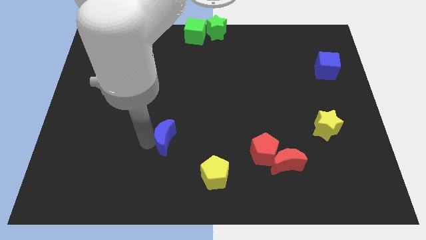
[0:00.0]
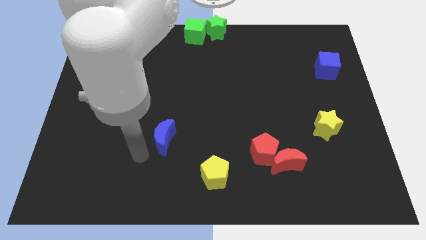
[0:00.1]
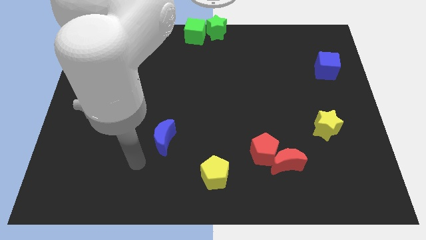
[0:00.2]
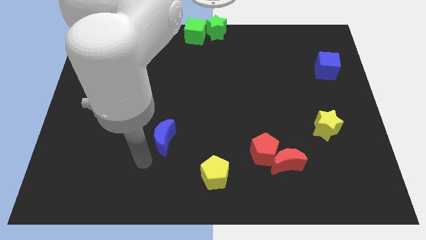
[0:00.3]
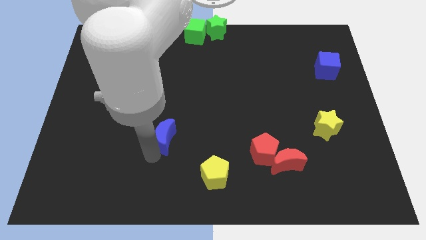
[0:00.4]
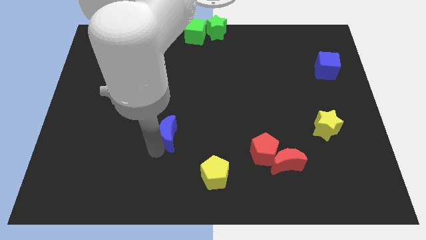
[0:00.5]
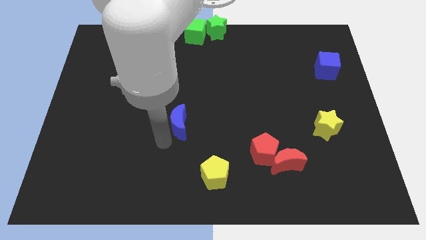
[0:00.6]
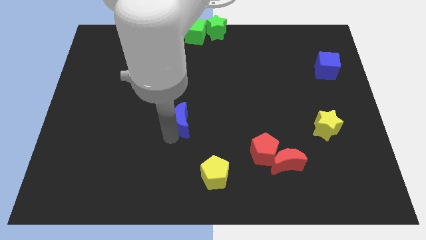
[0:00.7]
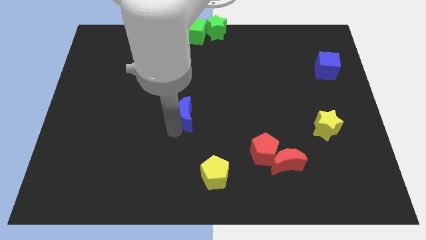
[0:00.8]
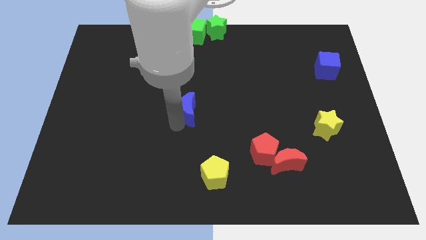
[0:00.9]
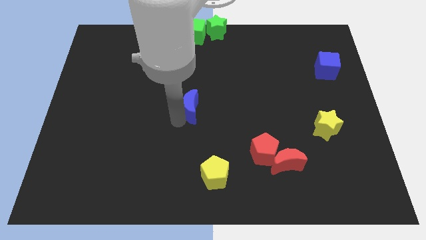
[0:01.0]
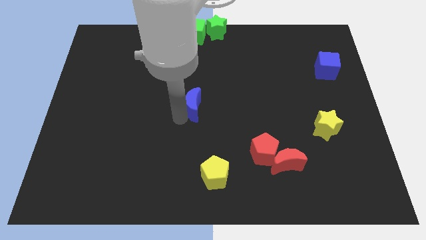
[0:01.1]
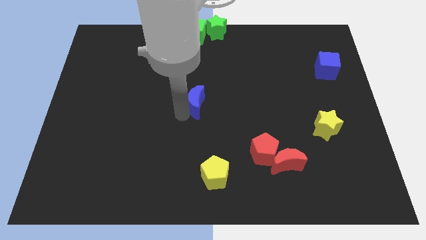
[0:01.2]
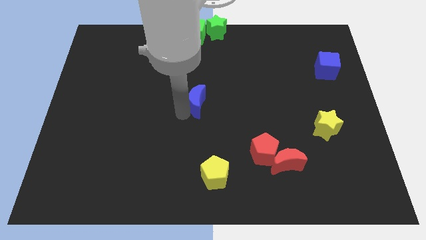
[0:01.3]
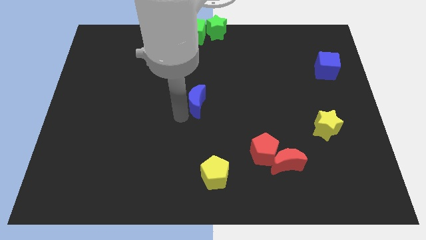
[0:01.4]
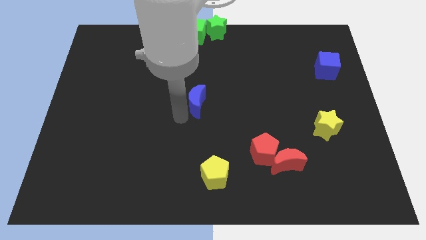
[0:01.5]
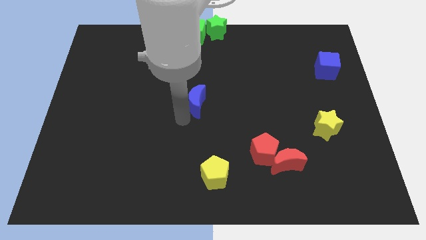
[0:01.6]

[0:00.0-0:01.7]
push the blue moon to the center

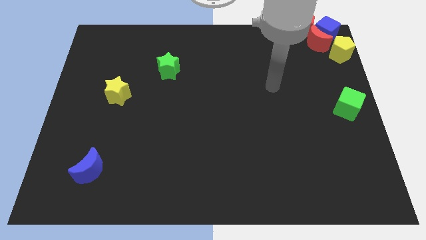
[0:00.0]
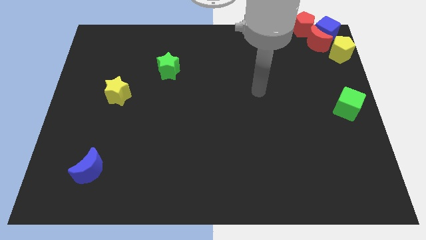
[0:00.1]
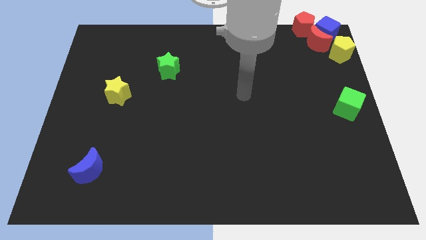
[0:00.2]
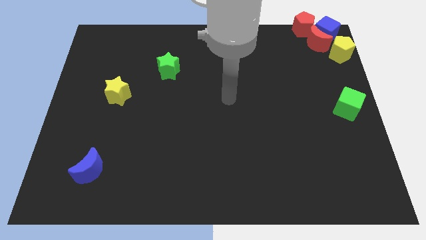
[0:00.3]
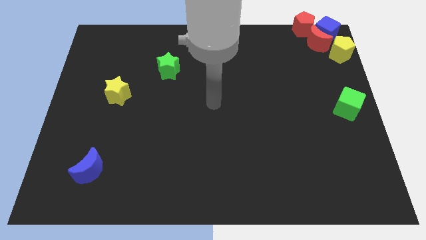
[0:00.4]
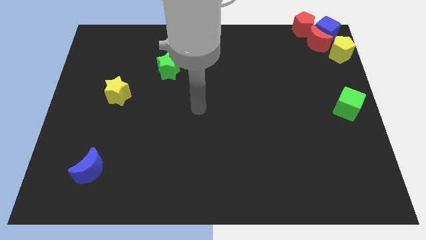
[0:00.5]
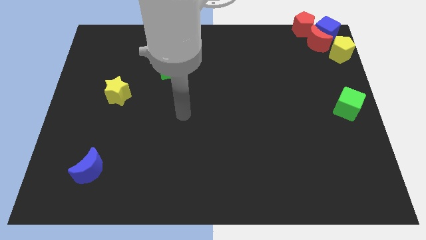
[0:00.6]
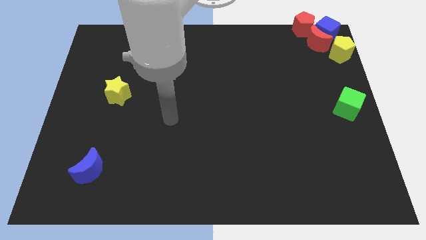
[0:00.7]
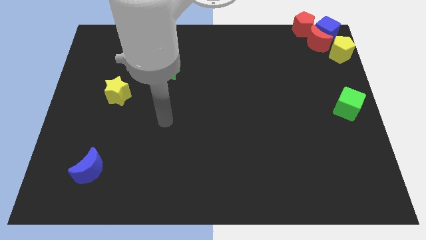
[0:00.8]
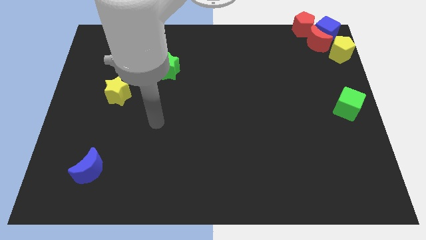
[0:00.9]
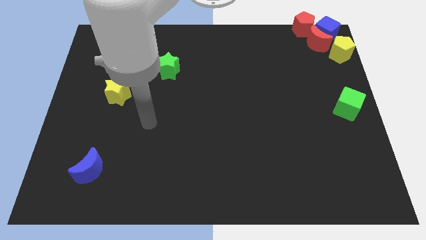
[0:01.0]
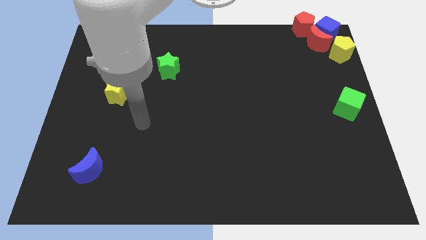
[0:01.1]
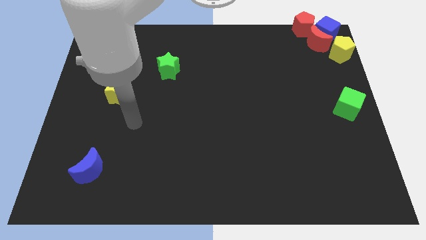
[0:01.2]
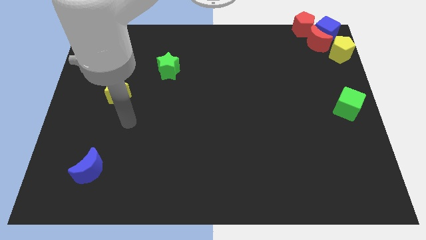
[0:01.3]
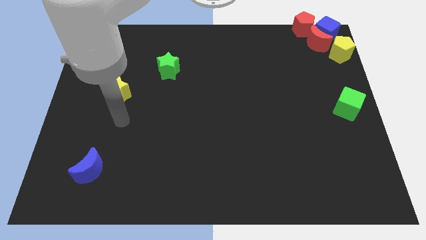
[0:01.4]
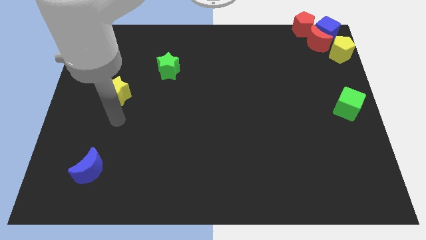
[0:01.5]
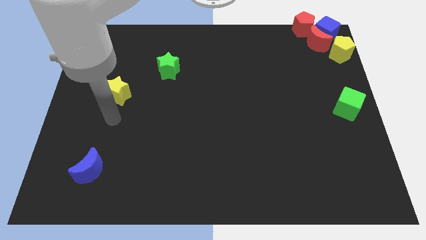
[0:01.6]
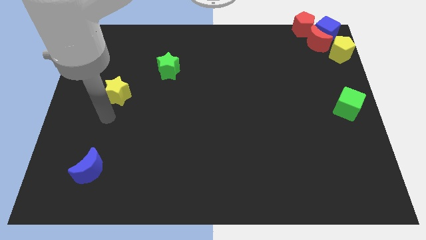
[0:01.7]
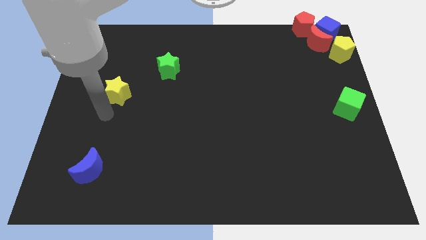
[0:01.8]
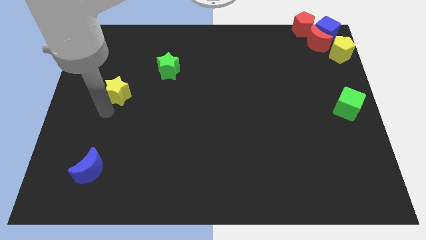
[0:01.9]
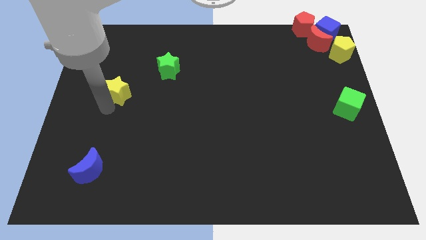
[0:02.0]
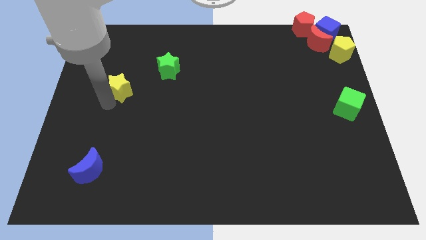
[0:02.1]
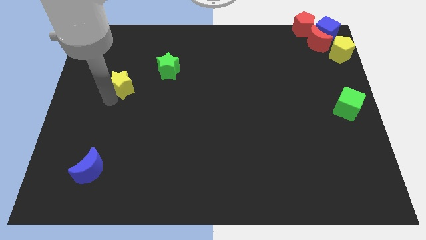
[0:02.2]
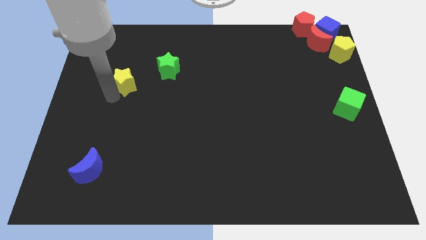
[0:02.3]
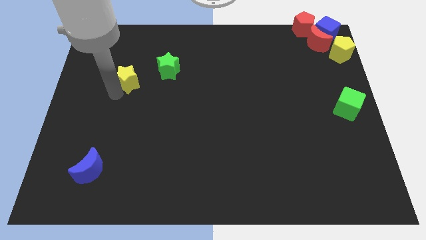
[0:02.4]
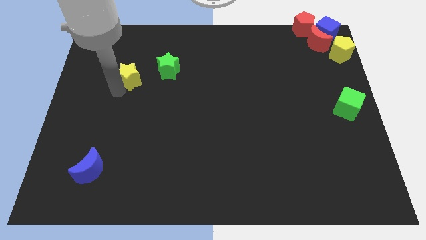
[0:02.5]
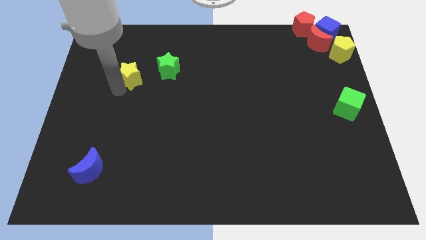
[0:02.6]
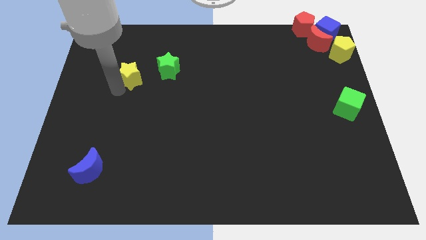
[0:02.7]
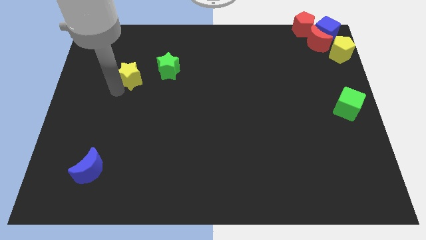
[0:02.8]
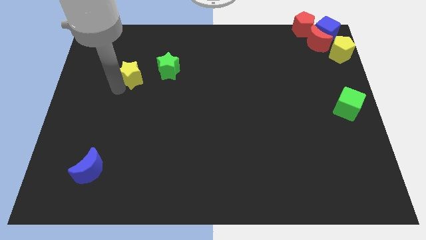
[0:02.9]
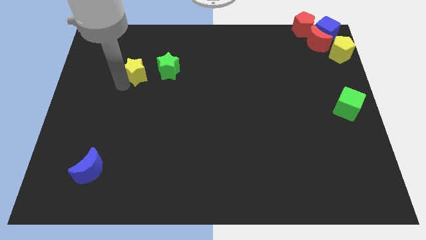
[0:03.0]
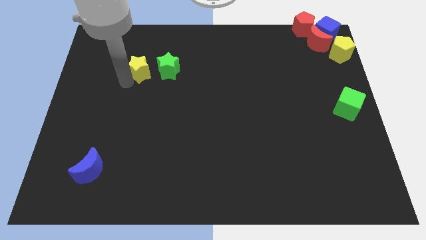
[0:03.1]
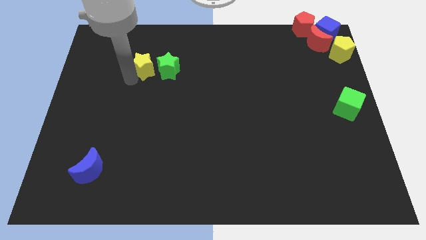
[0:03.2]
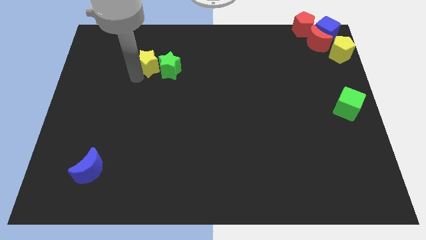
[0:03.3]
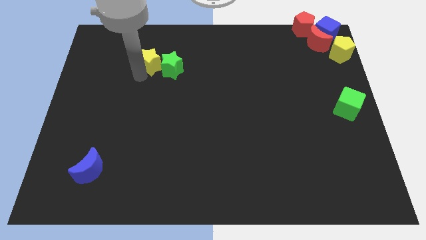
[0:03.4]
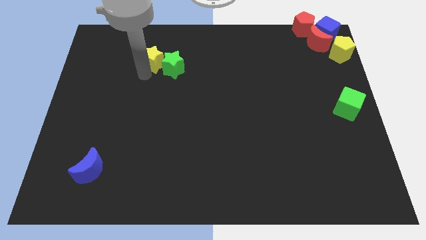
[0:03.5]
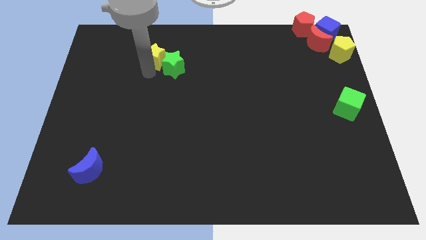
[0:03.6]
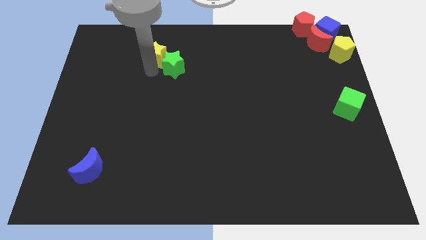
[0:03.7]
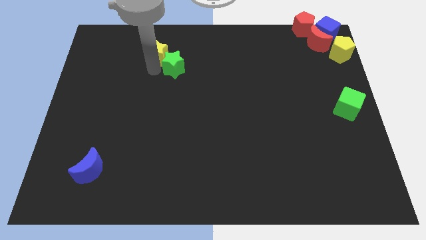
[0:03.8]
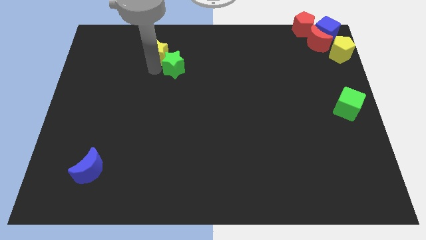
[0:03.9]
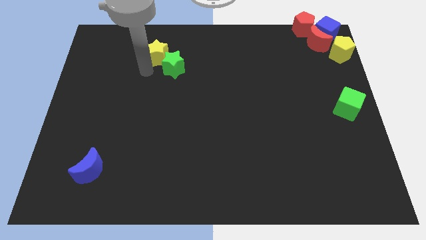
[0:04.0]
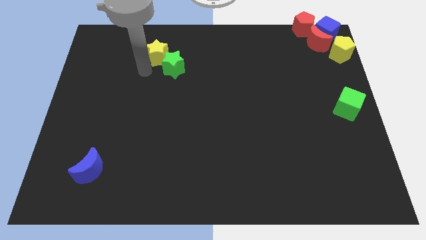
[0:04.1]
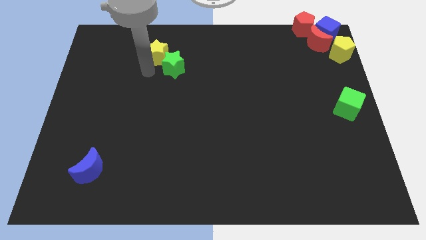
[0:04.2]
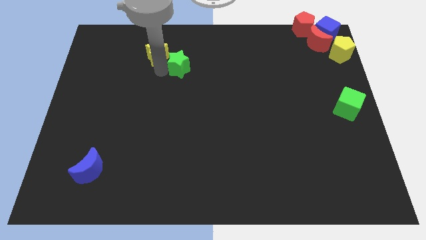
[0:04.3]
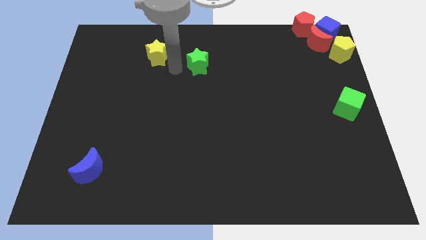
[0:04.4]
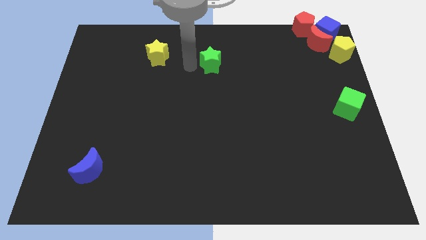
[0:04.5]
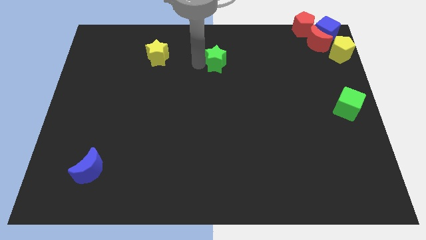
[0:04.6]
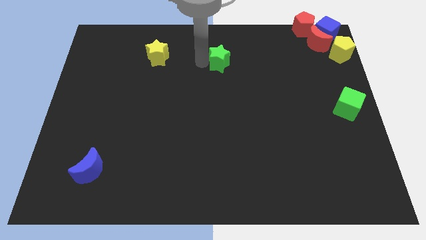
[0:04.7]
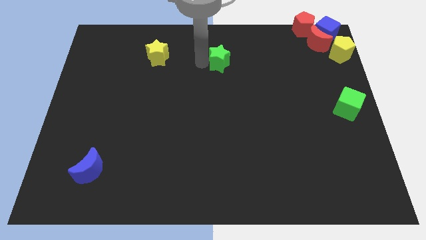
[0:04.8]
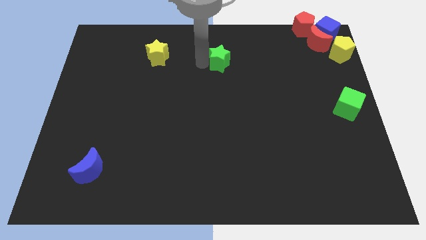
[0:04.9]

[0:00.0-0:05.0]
push the yellow star into the green star

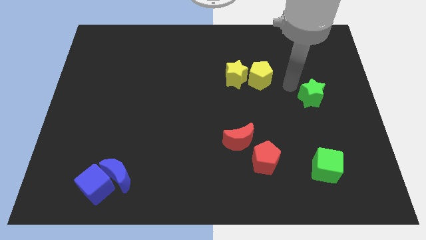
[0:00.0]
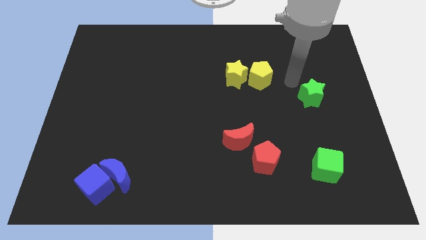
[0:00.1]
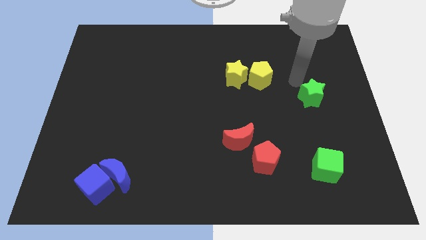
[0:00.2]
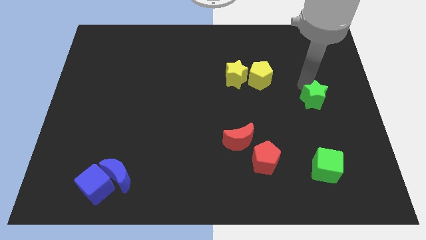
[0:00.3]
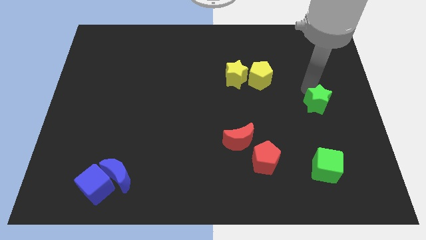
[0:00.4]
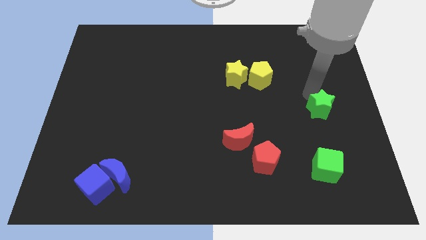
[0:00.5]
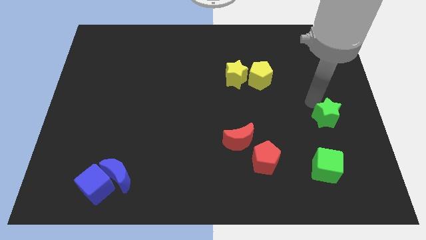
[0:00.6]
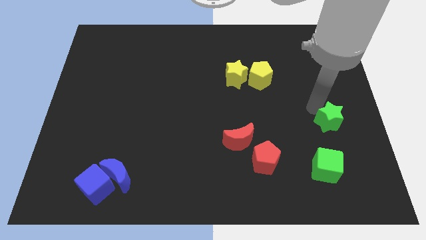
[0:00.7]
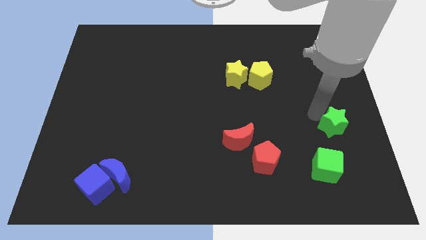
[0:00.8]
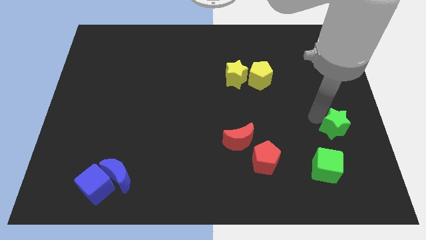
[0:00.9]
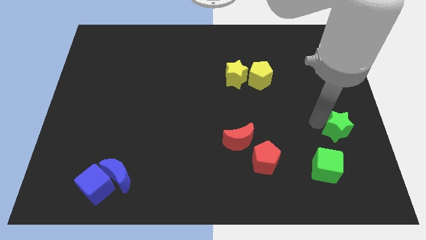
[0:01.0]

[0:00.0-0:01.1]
place the green star vertically above the green cube

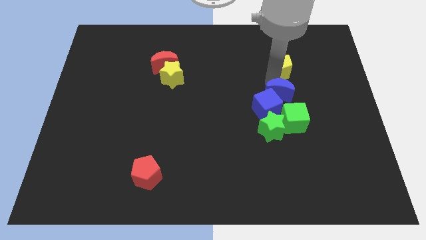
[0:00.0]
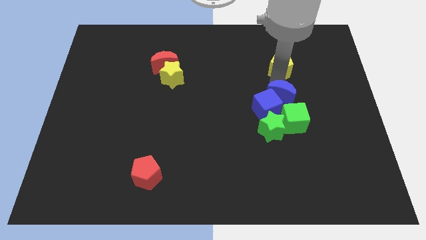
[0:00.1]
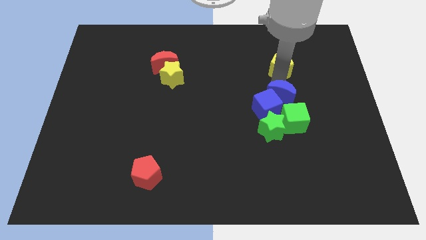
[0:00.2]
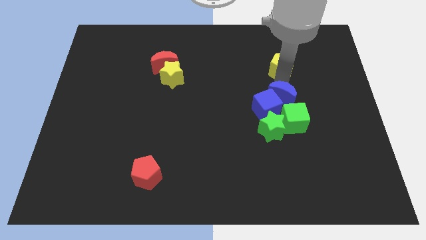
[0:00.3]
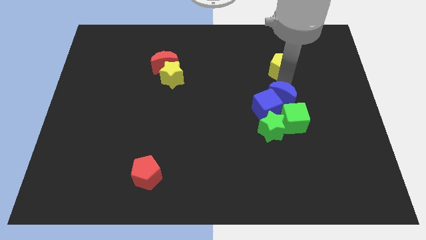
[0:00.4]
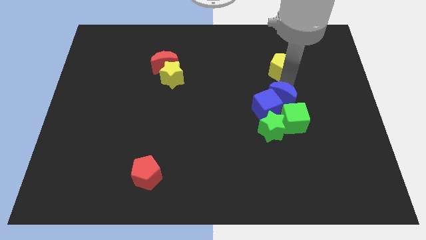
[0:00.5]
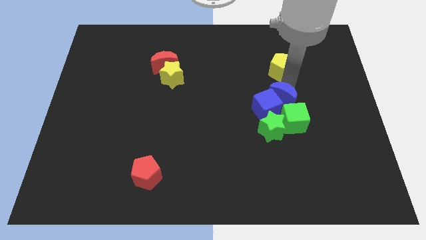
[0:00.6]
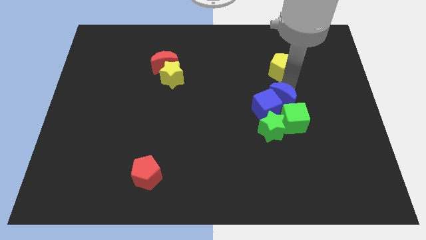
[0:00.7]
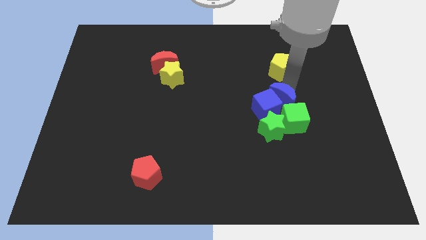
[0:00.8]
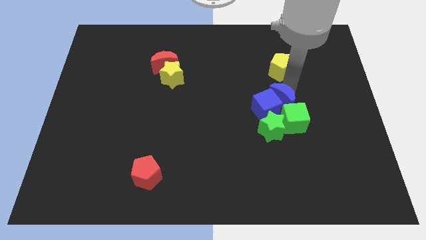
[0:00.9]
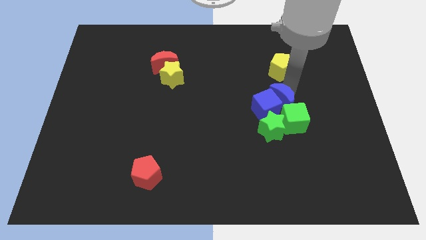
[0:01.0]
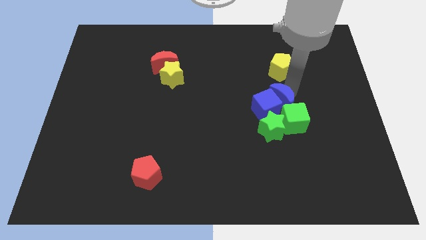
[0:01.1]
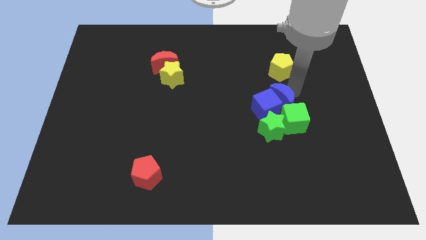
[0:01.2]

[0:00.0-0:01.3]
move the blue moon close to the top of the green cube
